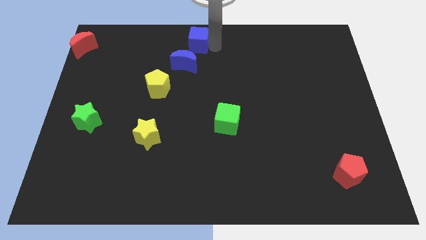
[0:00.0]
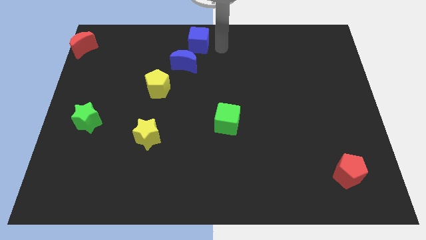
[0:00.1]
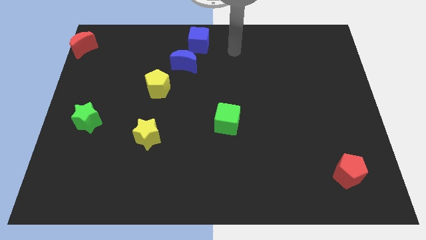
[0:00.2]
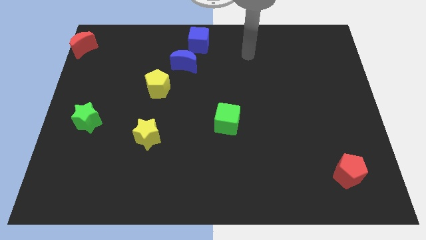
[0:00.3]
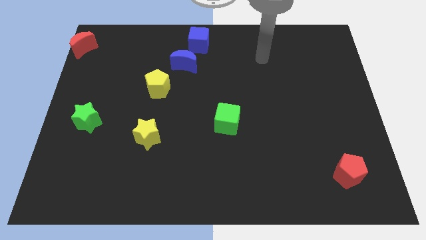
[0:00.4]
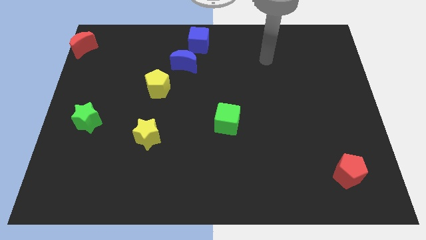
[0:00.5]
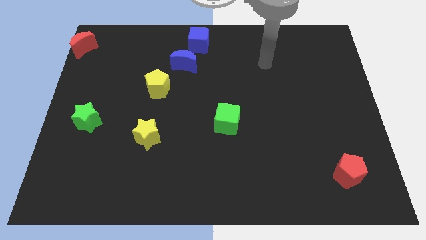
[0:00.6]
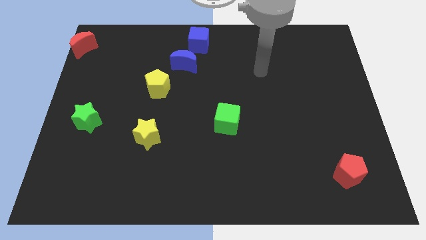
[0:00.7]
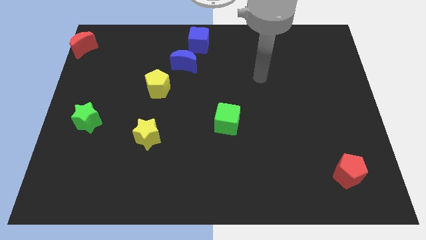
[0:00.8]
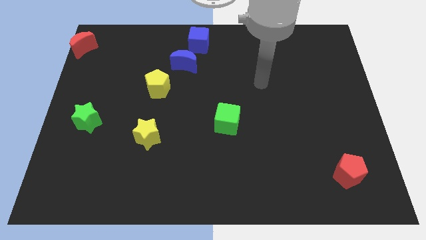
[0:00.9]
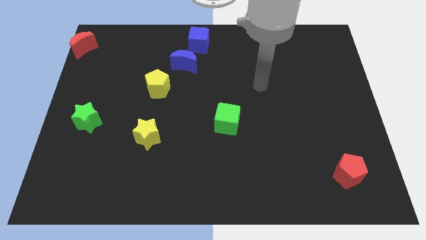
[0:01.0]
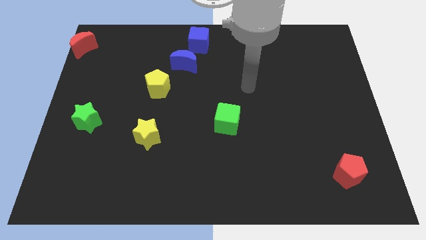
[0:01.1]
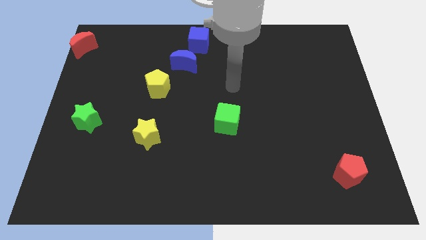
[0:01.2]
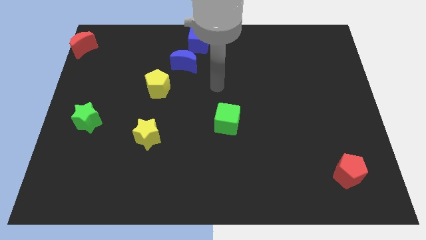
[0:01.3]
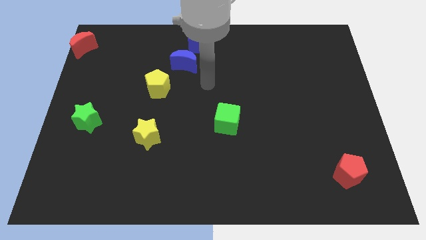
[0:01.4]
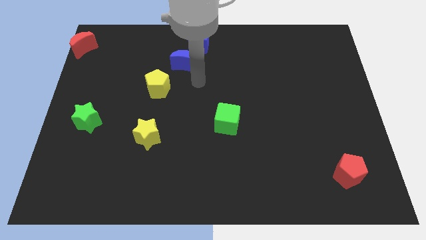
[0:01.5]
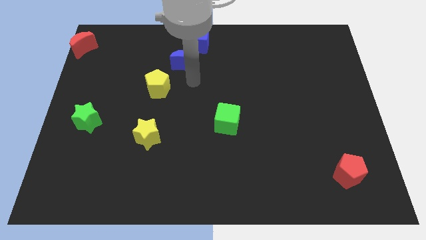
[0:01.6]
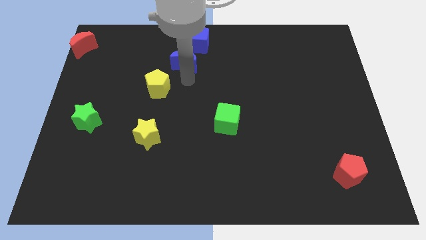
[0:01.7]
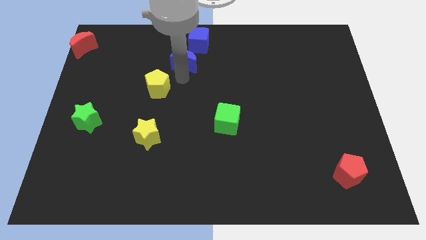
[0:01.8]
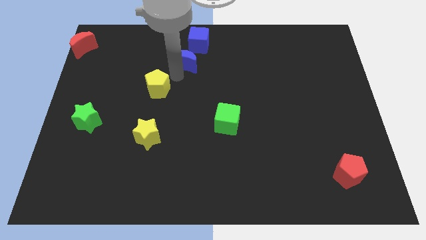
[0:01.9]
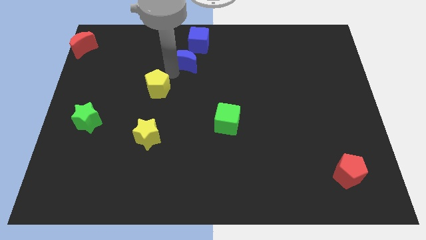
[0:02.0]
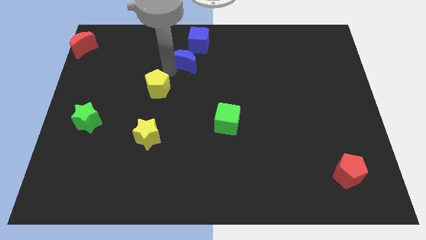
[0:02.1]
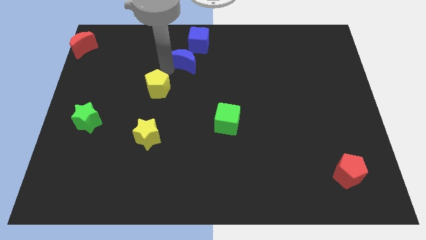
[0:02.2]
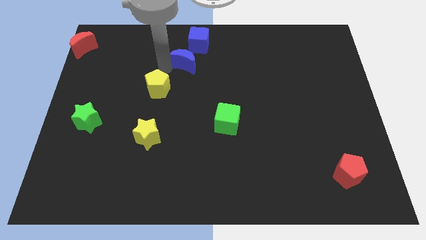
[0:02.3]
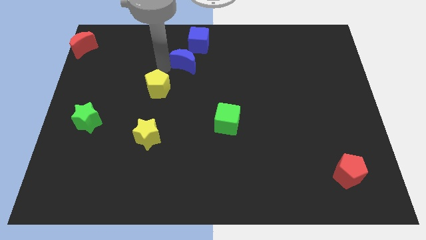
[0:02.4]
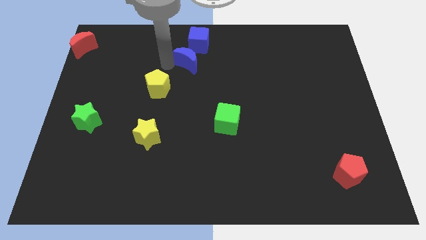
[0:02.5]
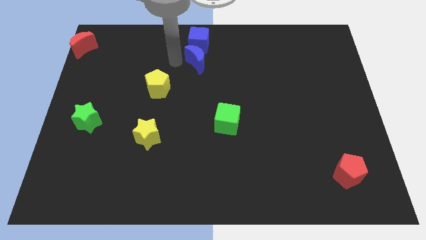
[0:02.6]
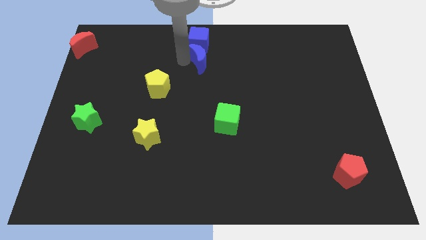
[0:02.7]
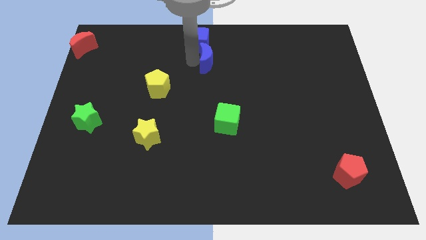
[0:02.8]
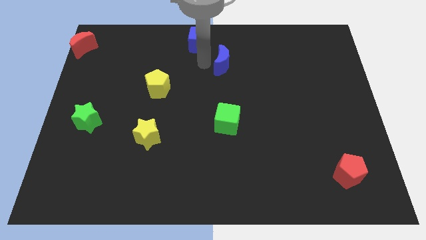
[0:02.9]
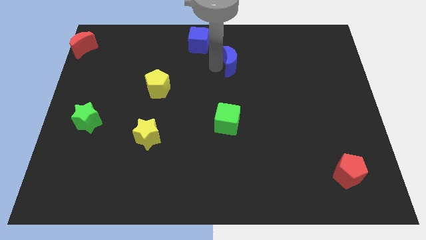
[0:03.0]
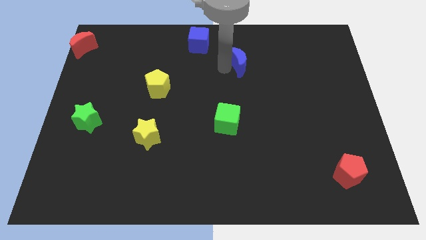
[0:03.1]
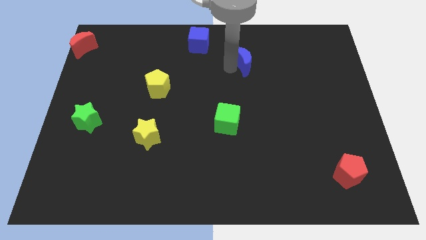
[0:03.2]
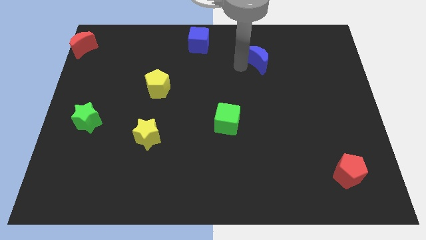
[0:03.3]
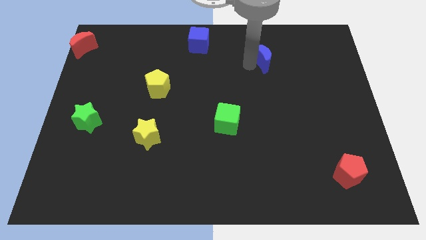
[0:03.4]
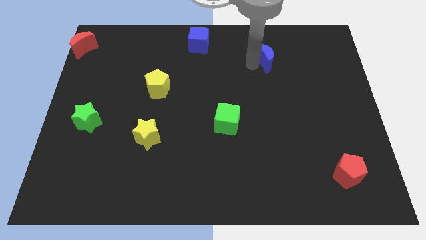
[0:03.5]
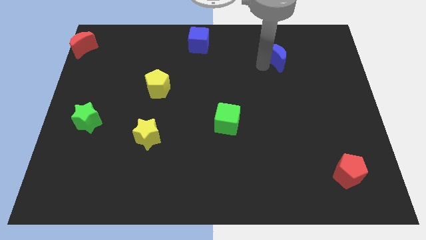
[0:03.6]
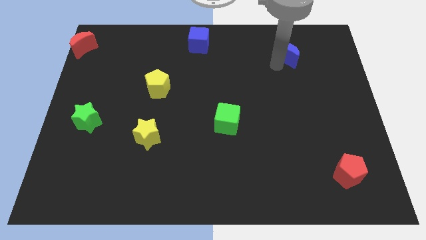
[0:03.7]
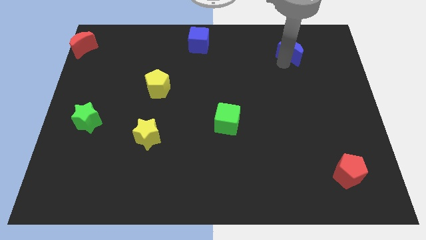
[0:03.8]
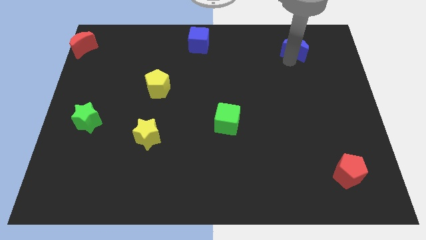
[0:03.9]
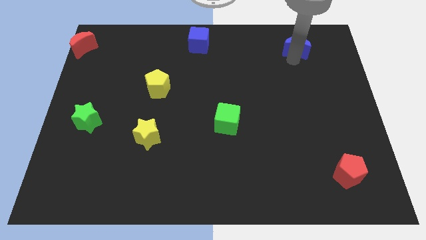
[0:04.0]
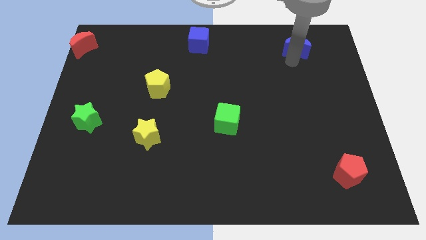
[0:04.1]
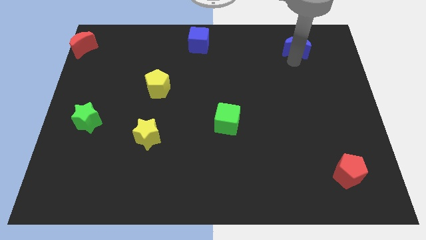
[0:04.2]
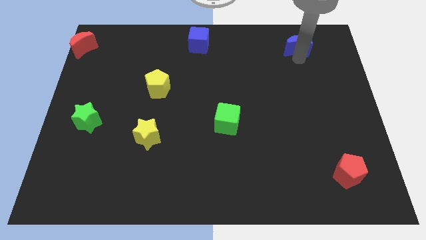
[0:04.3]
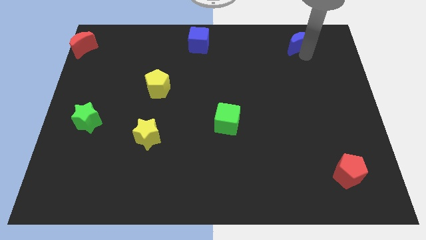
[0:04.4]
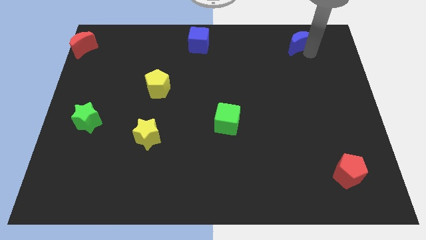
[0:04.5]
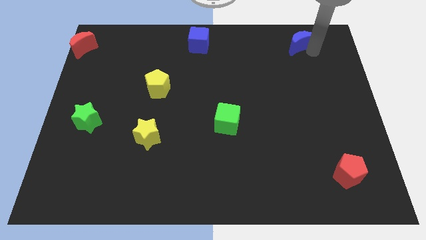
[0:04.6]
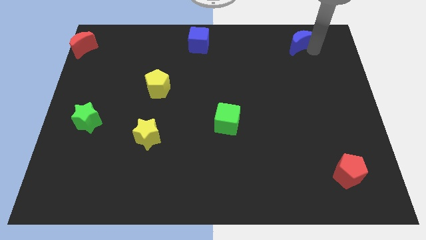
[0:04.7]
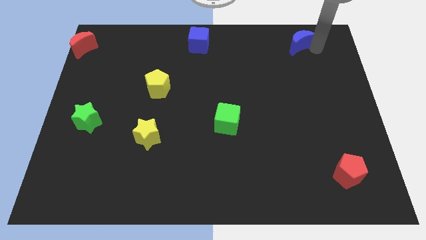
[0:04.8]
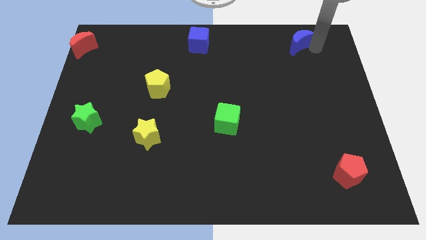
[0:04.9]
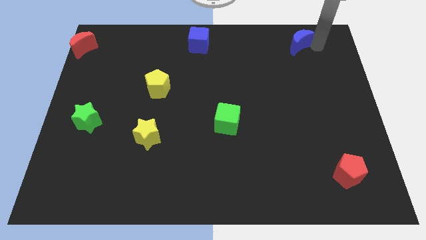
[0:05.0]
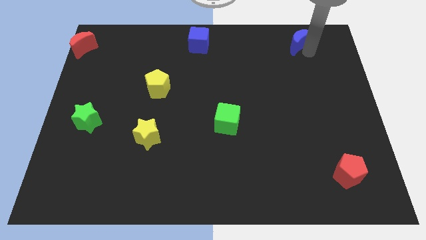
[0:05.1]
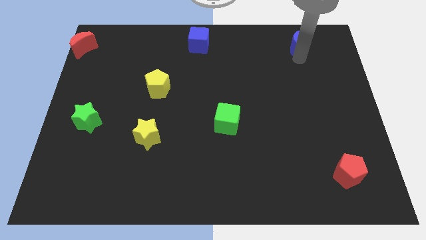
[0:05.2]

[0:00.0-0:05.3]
put the blue moon horizontally at the right side of the blue cube

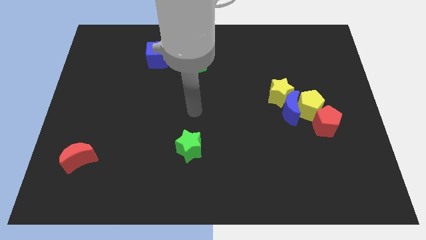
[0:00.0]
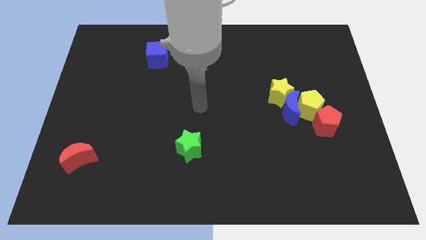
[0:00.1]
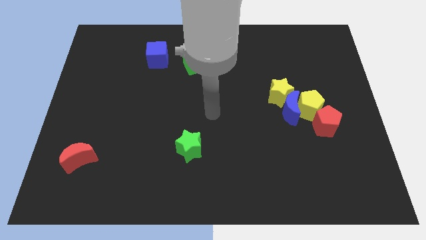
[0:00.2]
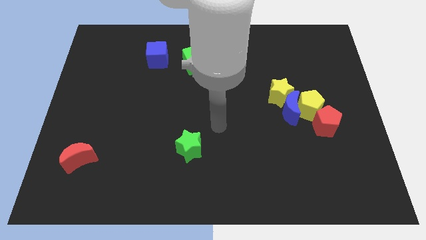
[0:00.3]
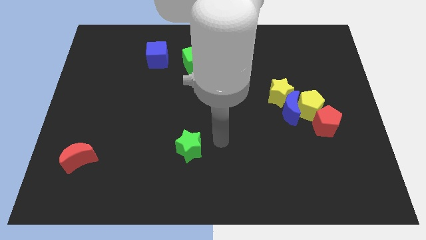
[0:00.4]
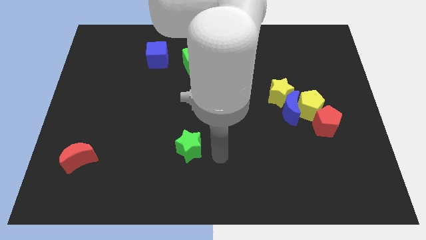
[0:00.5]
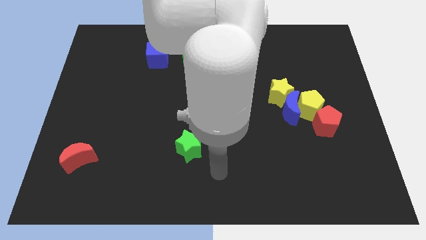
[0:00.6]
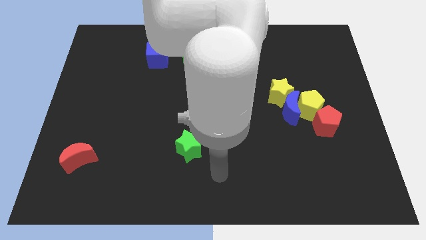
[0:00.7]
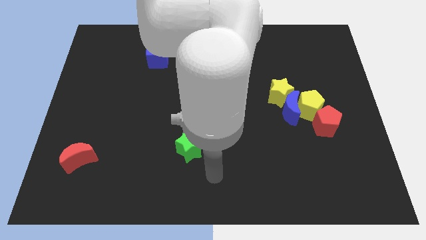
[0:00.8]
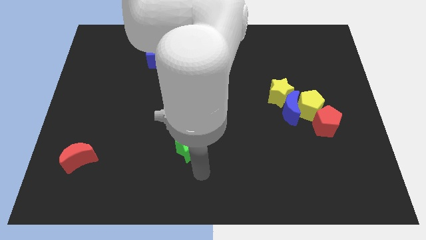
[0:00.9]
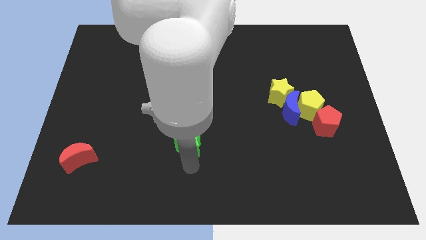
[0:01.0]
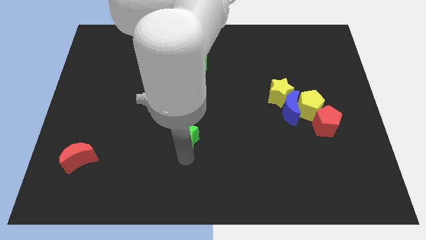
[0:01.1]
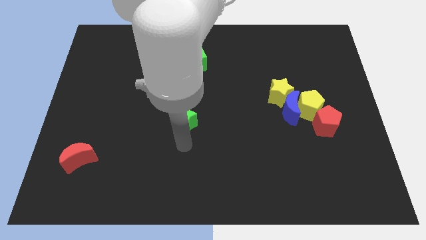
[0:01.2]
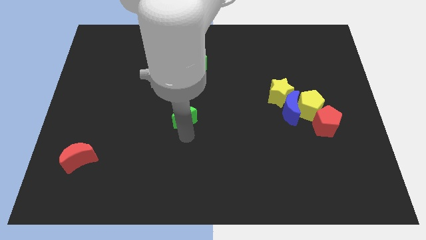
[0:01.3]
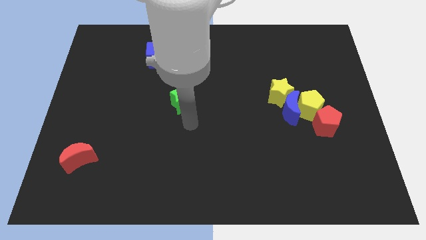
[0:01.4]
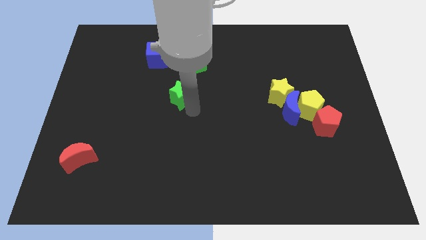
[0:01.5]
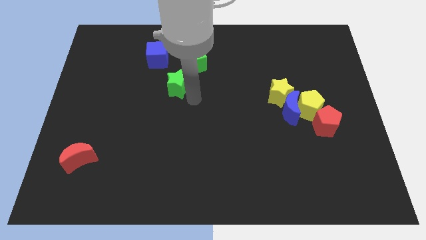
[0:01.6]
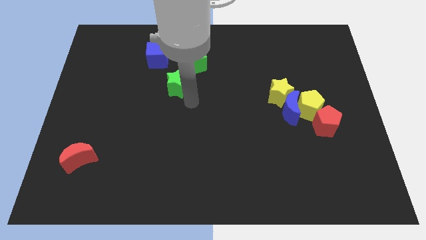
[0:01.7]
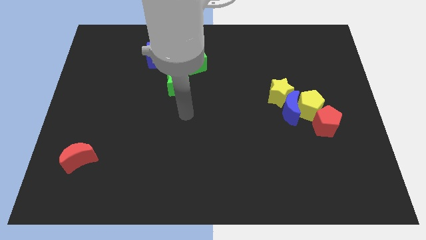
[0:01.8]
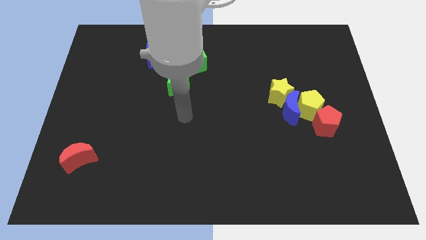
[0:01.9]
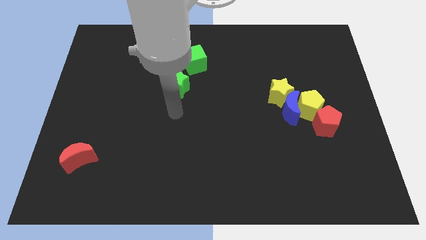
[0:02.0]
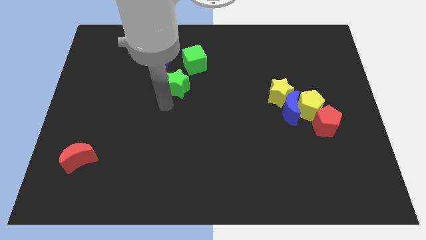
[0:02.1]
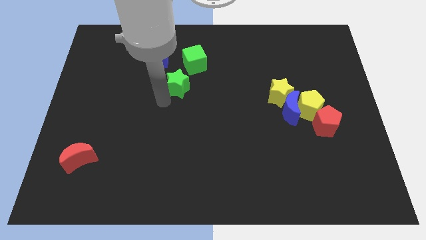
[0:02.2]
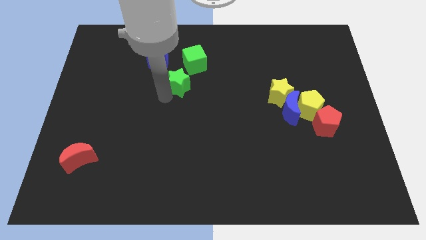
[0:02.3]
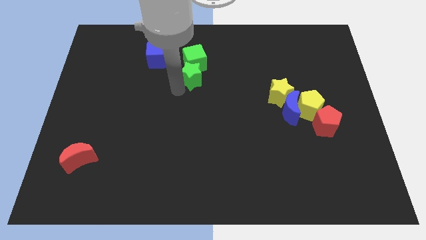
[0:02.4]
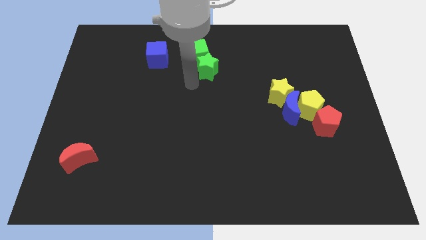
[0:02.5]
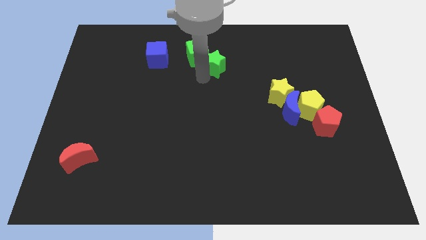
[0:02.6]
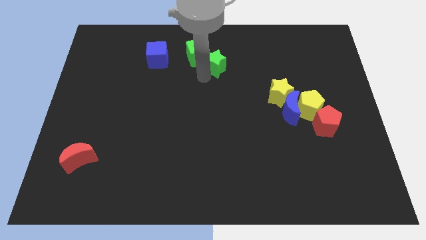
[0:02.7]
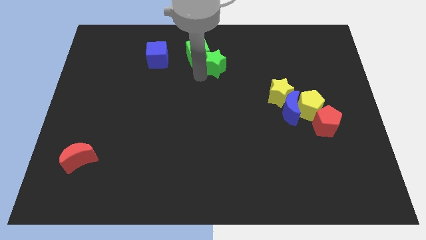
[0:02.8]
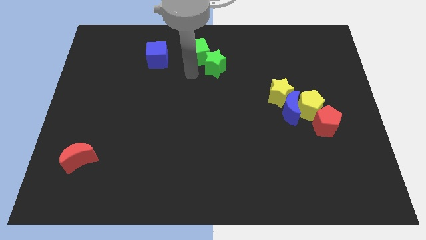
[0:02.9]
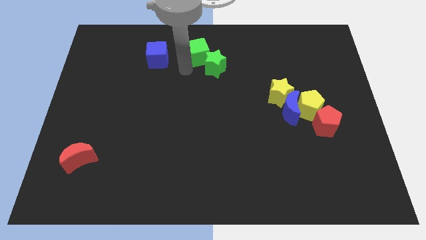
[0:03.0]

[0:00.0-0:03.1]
place the green star at the bottom right of the green cube

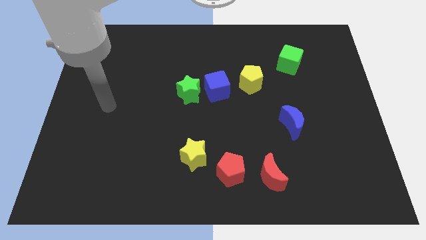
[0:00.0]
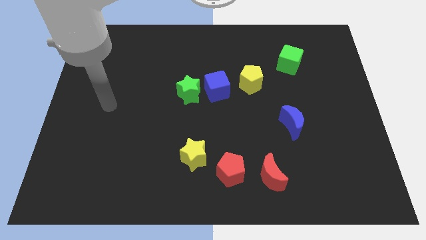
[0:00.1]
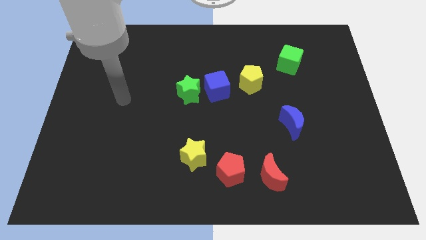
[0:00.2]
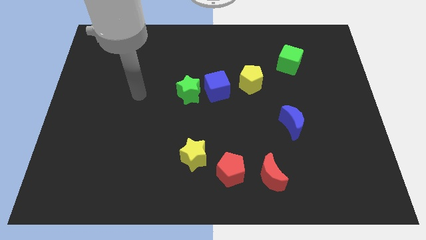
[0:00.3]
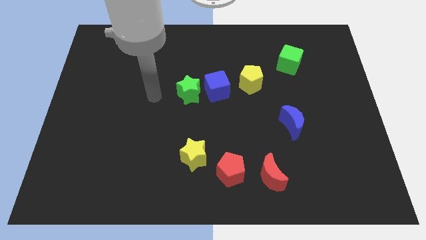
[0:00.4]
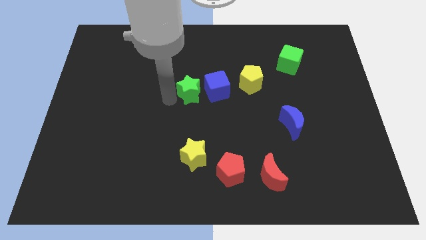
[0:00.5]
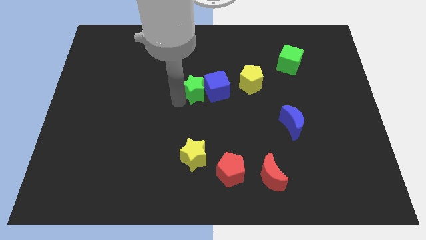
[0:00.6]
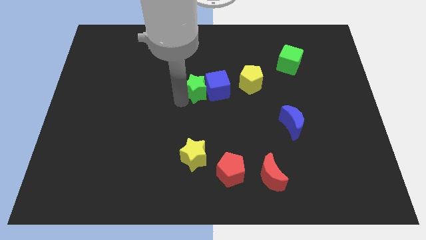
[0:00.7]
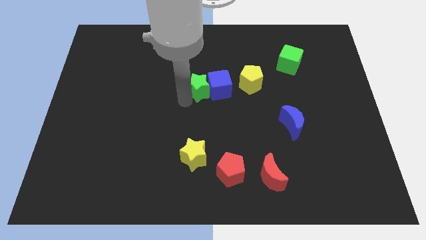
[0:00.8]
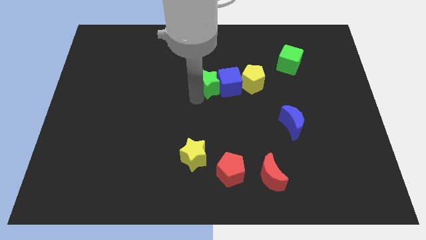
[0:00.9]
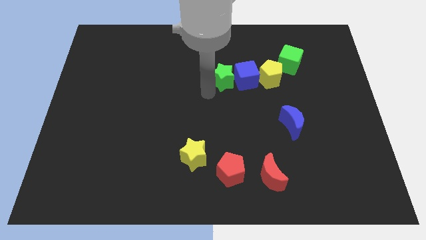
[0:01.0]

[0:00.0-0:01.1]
slide green star into blue cube
